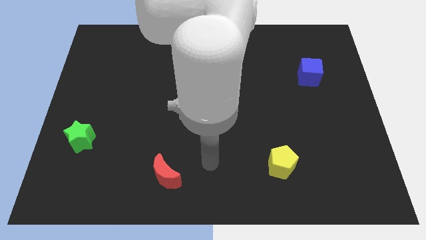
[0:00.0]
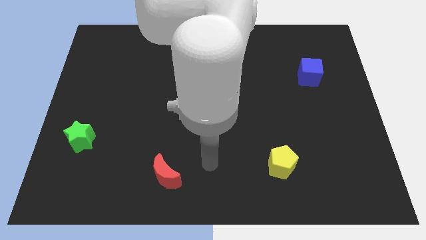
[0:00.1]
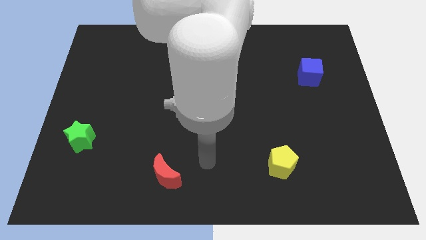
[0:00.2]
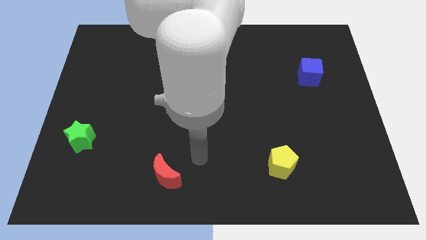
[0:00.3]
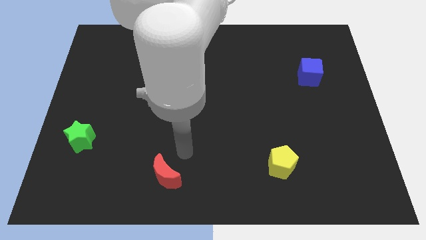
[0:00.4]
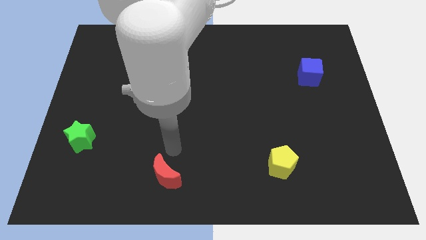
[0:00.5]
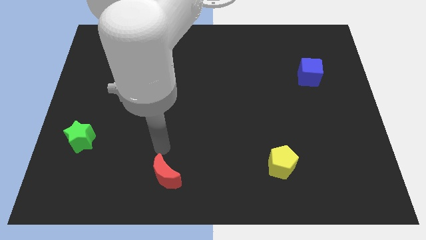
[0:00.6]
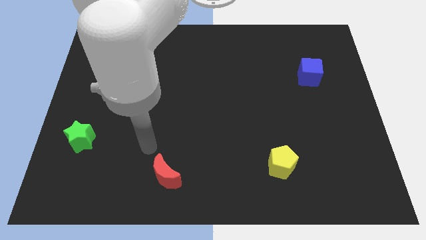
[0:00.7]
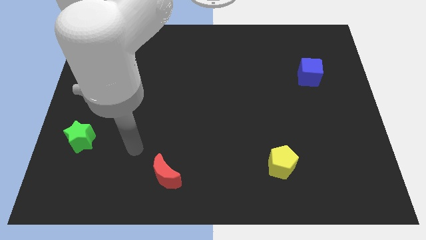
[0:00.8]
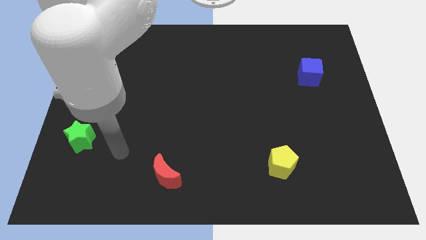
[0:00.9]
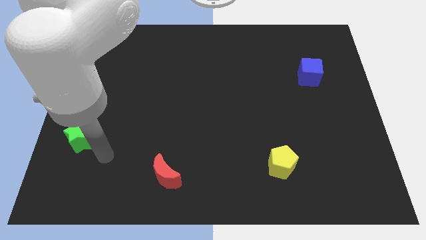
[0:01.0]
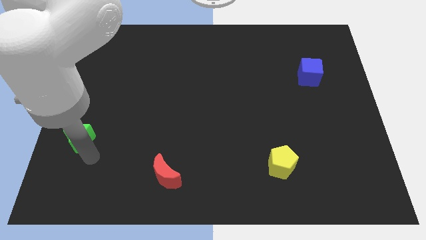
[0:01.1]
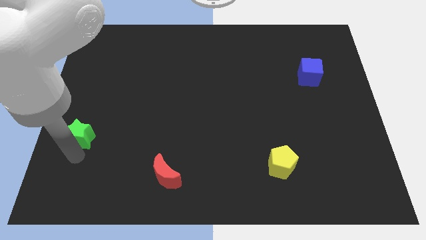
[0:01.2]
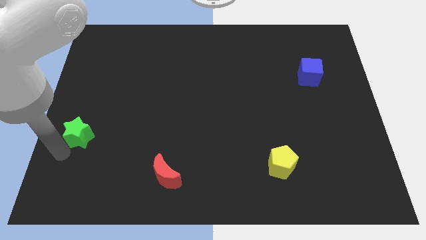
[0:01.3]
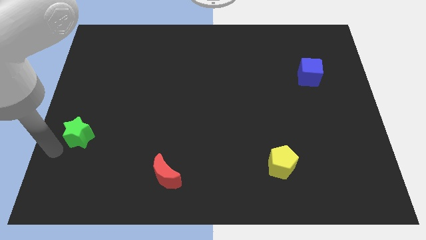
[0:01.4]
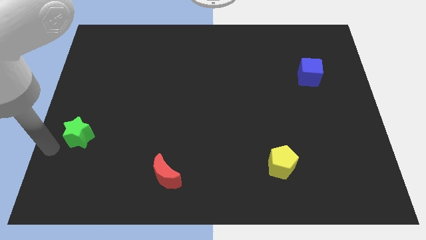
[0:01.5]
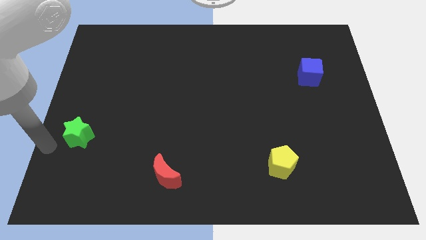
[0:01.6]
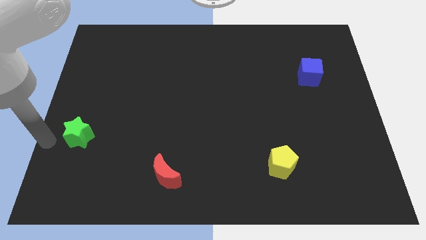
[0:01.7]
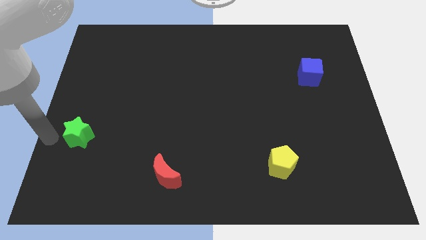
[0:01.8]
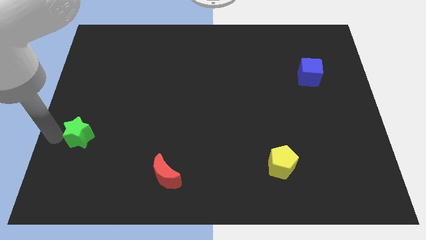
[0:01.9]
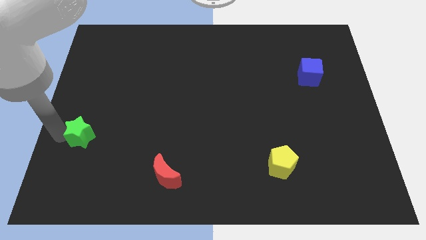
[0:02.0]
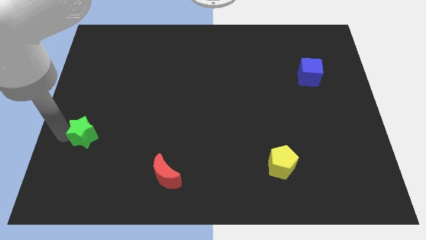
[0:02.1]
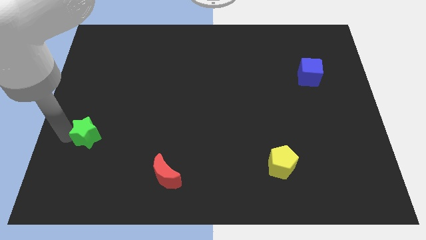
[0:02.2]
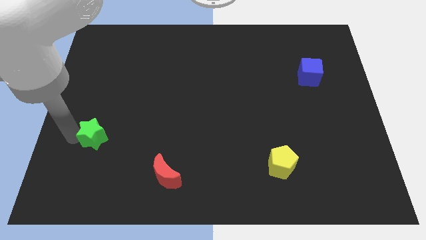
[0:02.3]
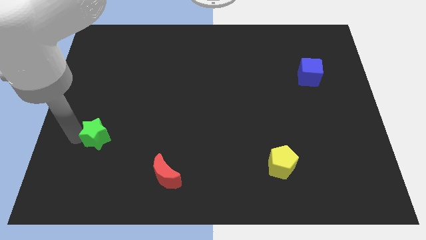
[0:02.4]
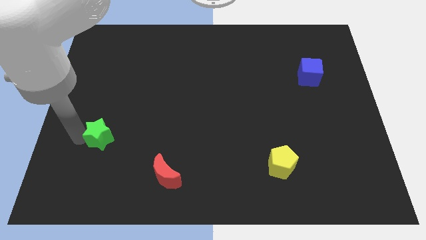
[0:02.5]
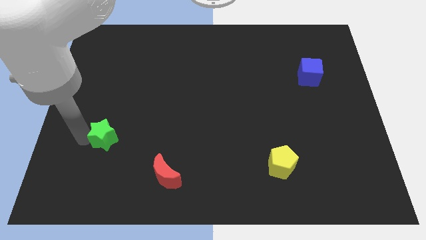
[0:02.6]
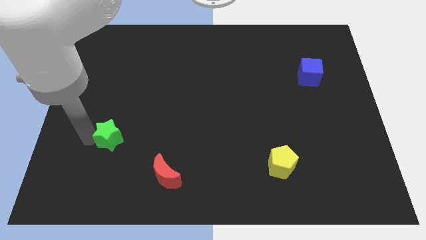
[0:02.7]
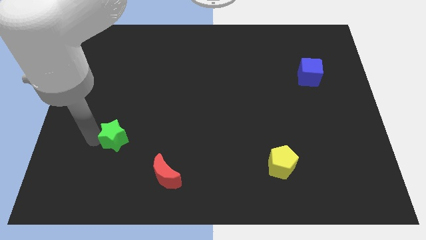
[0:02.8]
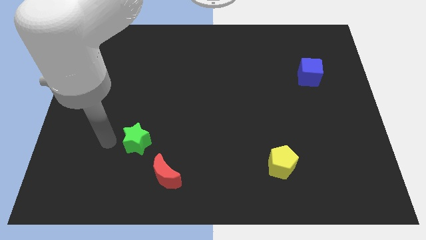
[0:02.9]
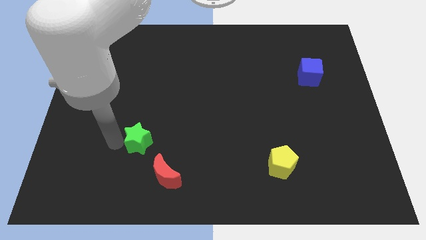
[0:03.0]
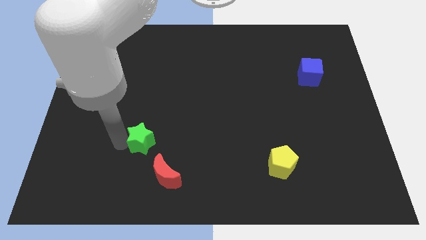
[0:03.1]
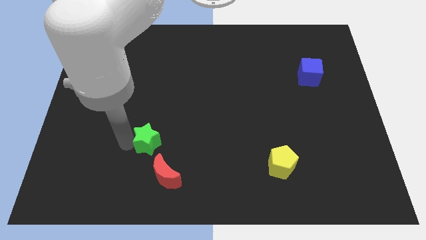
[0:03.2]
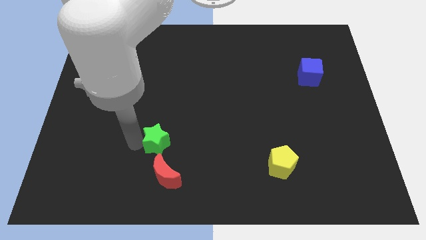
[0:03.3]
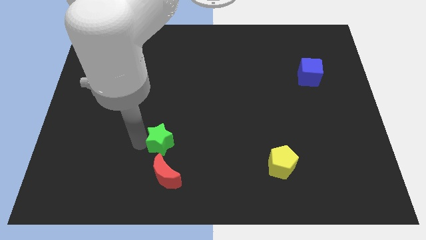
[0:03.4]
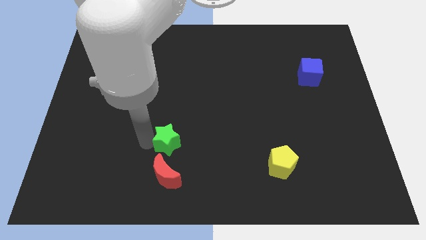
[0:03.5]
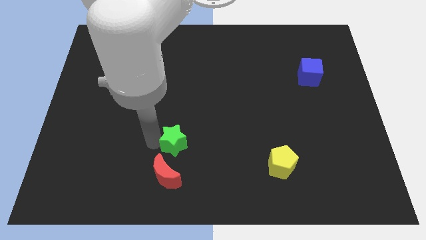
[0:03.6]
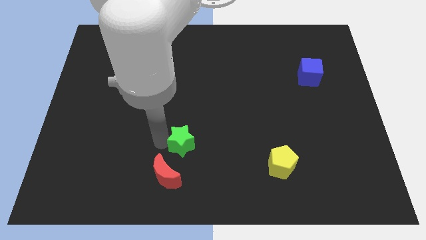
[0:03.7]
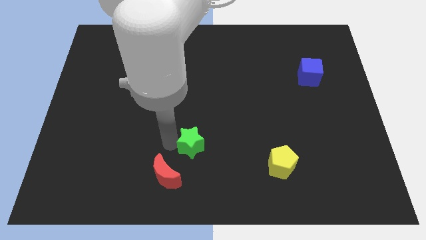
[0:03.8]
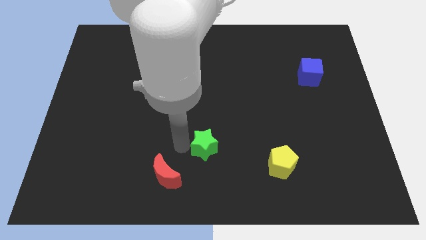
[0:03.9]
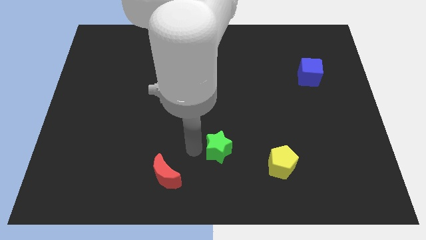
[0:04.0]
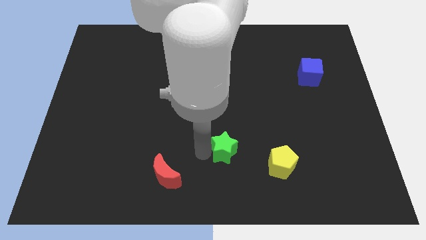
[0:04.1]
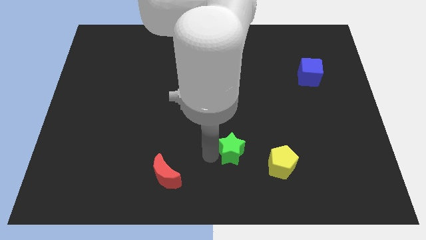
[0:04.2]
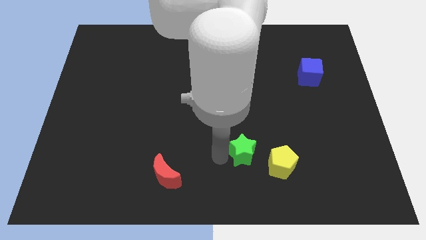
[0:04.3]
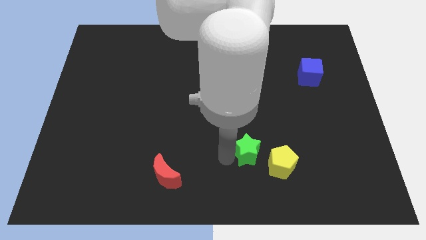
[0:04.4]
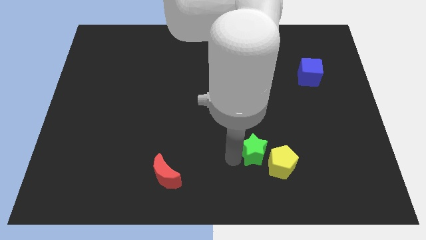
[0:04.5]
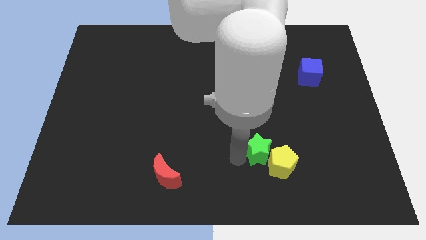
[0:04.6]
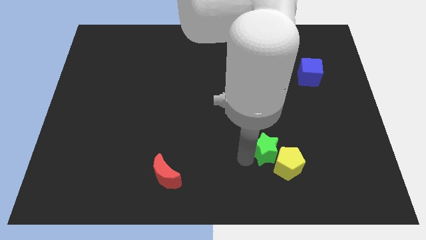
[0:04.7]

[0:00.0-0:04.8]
put the green block next to the yellow block

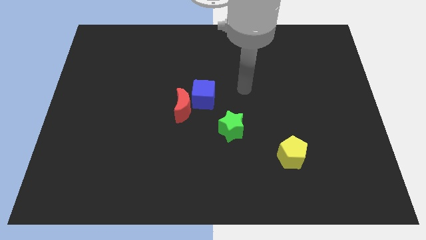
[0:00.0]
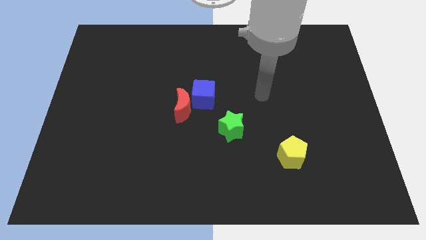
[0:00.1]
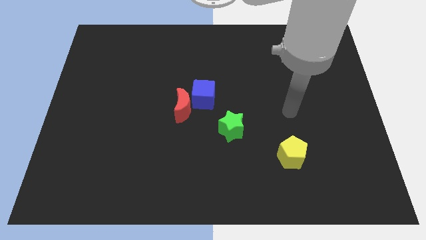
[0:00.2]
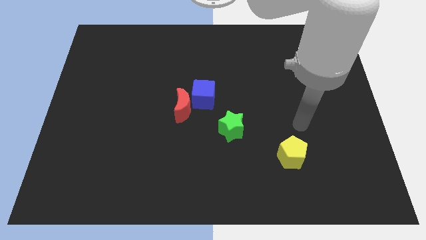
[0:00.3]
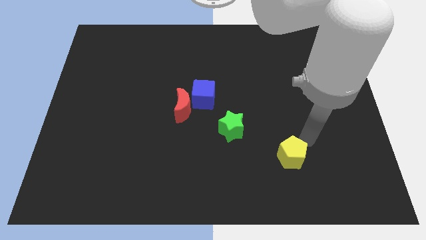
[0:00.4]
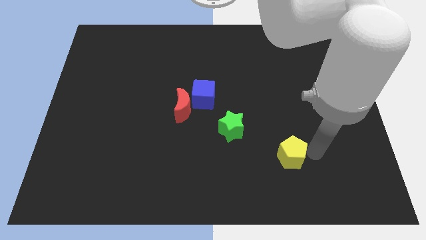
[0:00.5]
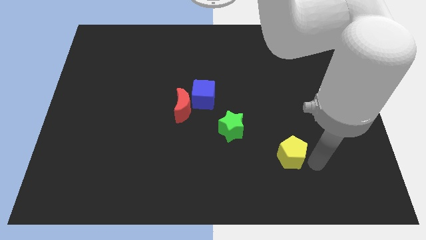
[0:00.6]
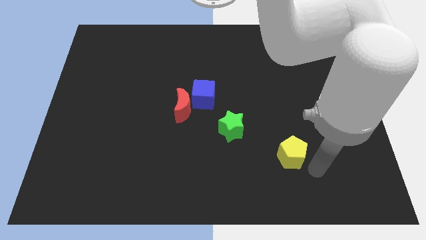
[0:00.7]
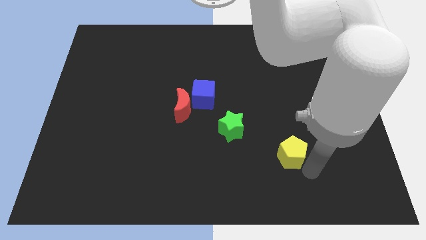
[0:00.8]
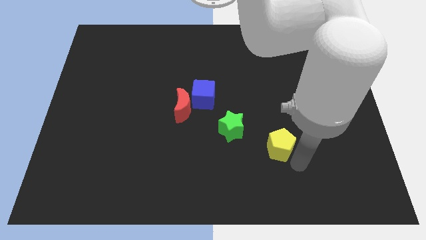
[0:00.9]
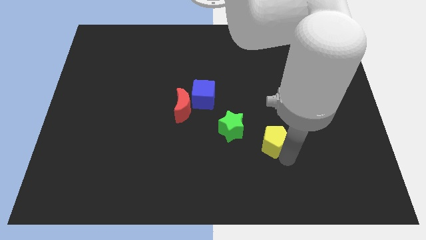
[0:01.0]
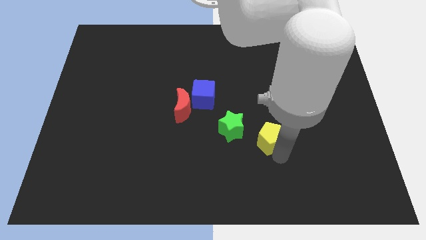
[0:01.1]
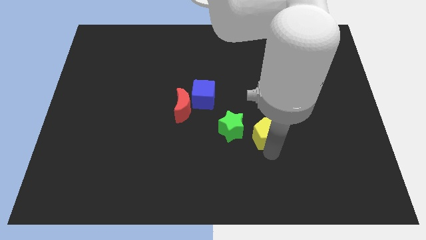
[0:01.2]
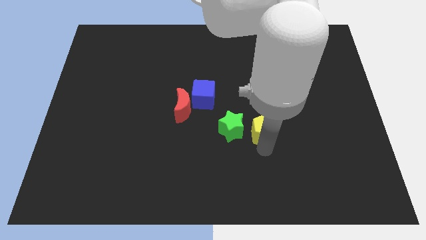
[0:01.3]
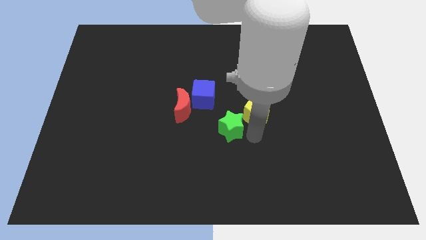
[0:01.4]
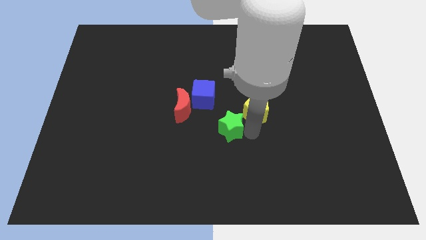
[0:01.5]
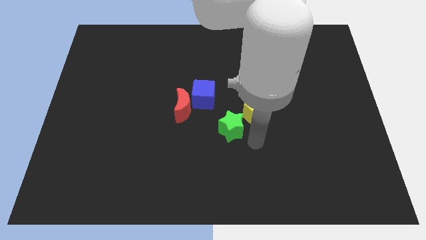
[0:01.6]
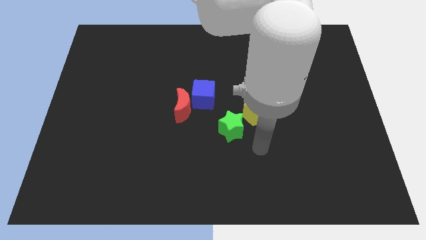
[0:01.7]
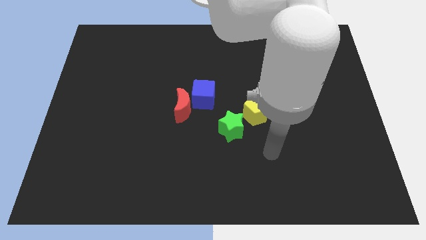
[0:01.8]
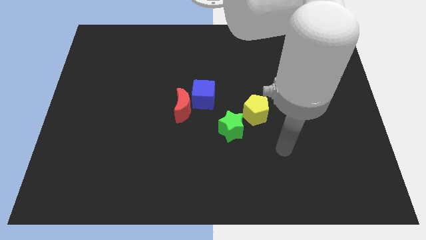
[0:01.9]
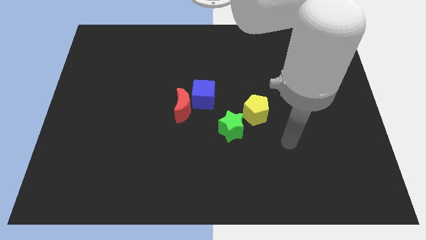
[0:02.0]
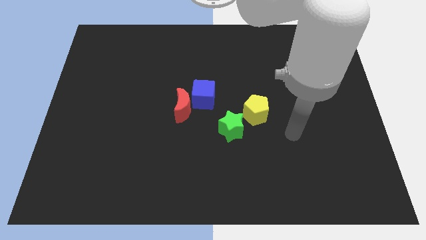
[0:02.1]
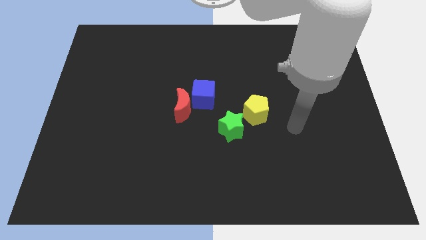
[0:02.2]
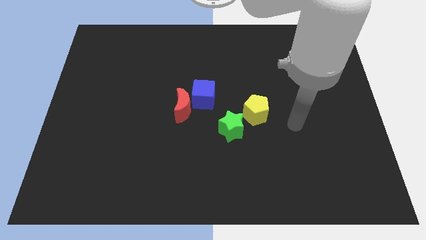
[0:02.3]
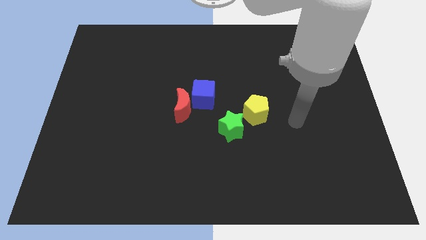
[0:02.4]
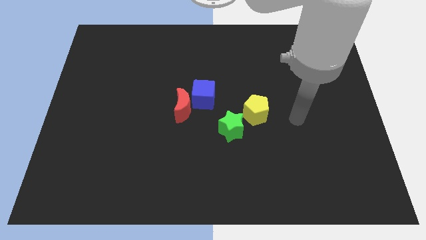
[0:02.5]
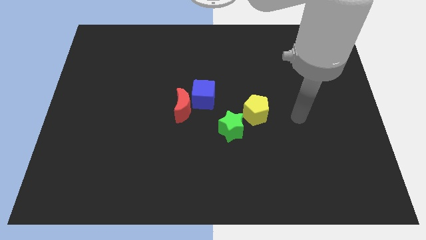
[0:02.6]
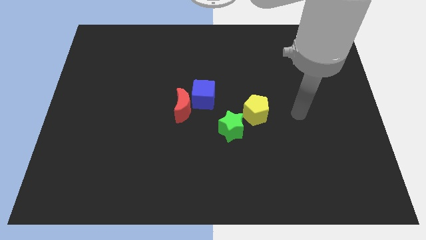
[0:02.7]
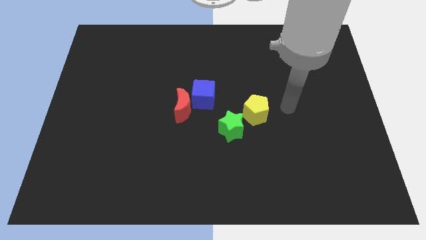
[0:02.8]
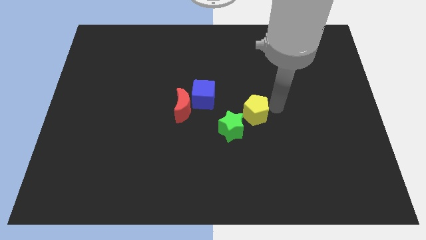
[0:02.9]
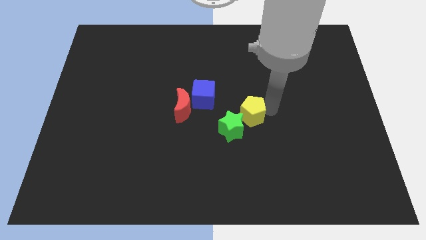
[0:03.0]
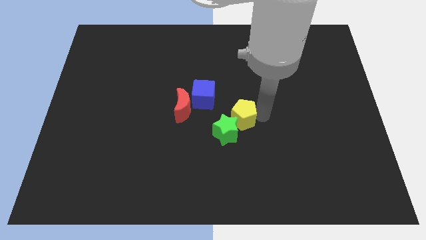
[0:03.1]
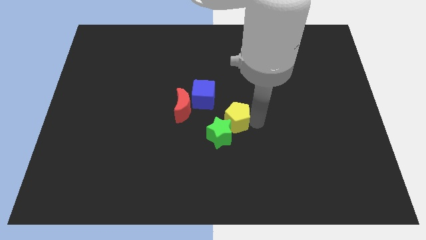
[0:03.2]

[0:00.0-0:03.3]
put the pentagon close to the star

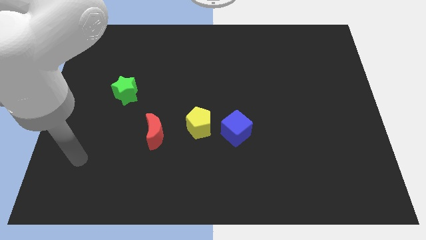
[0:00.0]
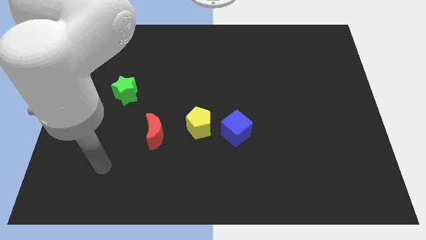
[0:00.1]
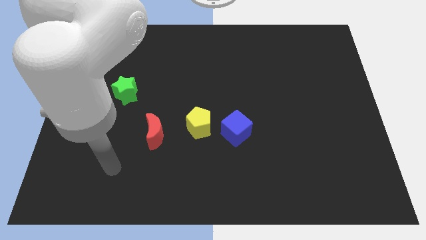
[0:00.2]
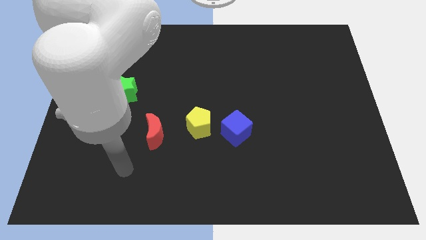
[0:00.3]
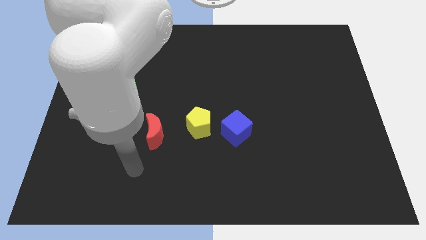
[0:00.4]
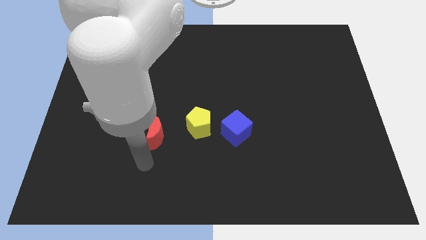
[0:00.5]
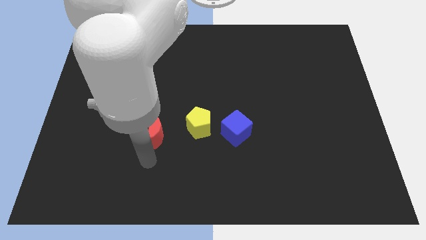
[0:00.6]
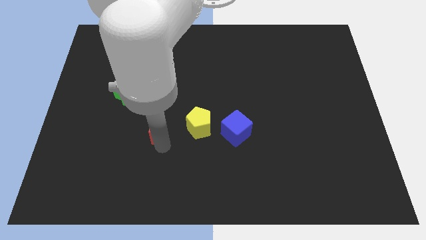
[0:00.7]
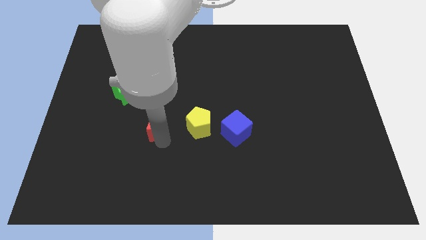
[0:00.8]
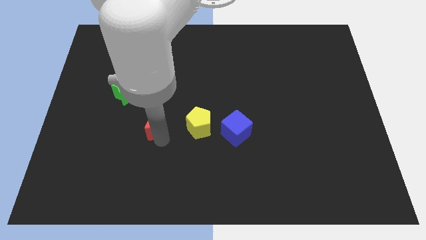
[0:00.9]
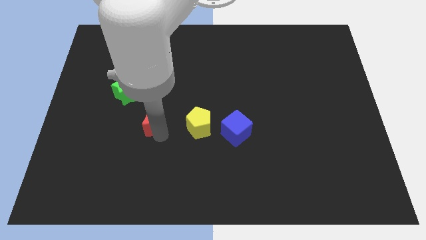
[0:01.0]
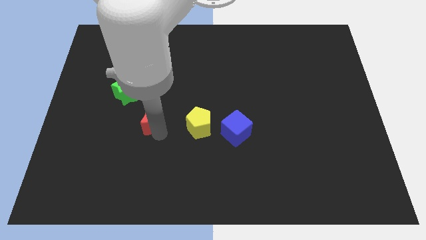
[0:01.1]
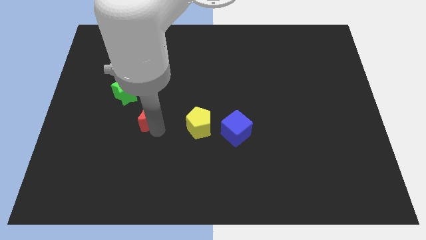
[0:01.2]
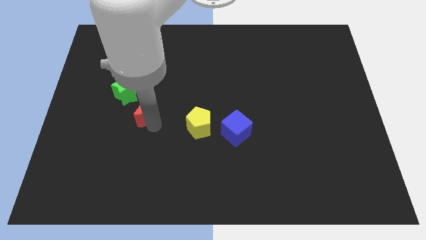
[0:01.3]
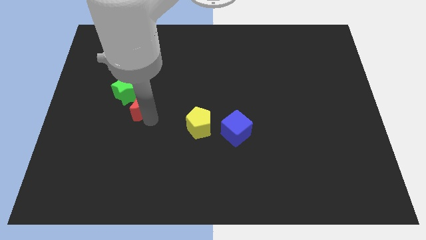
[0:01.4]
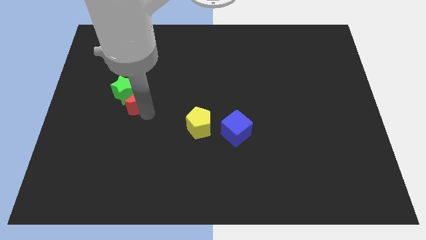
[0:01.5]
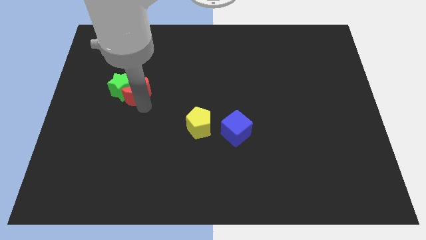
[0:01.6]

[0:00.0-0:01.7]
put the red block next to the green block
